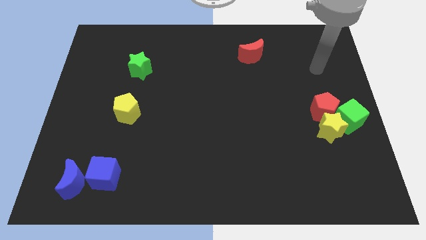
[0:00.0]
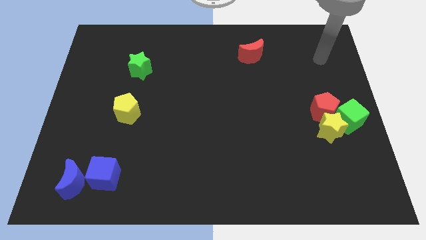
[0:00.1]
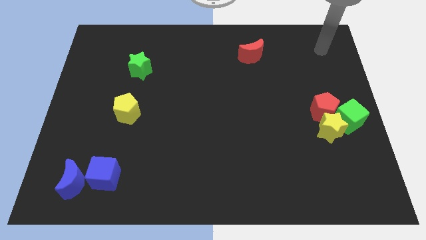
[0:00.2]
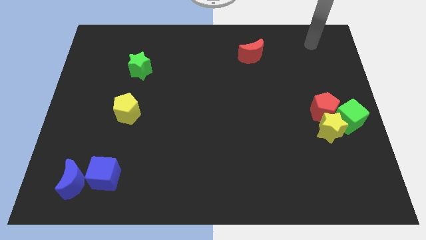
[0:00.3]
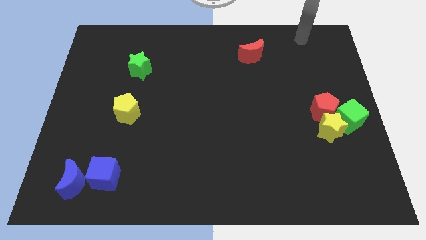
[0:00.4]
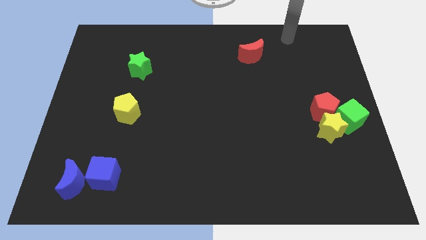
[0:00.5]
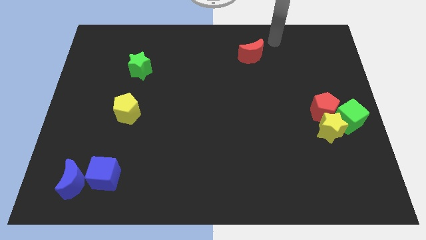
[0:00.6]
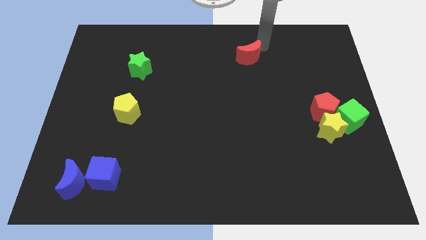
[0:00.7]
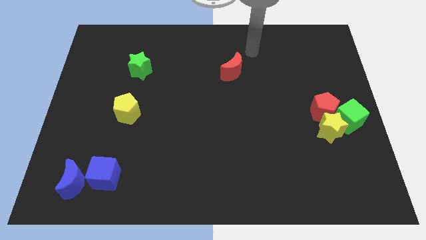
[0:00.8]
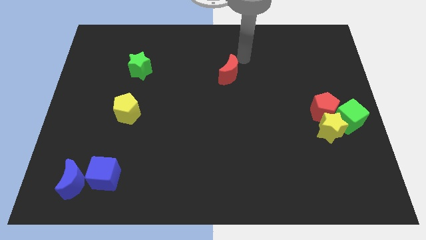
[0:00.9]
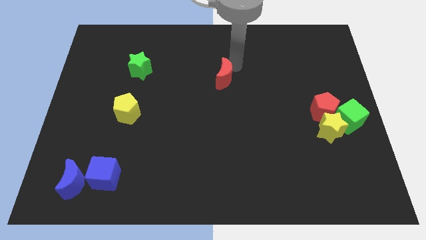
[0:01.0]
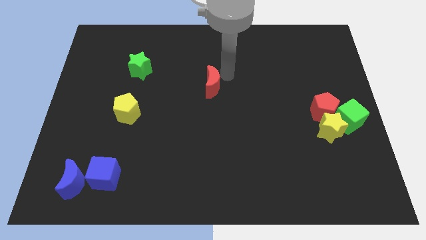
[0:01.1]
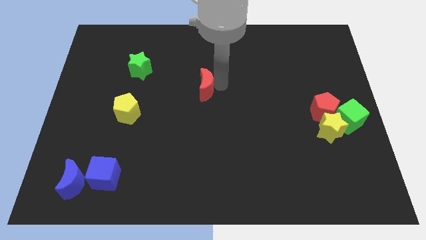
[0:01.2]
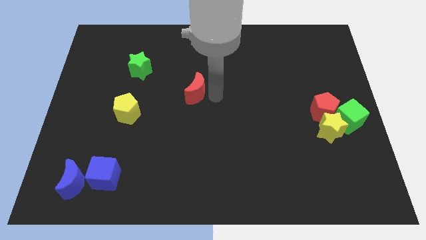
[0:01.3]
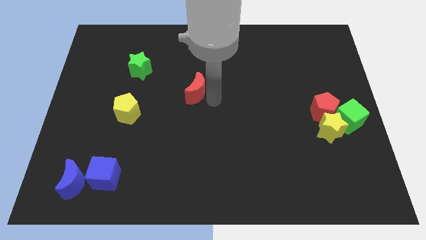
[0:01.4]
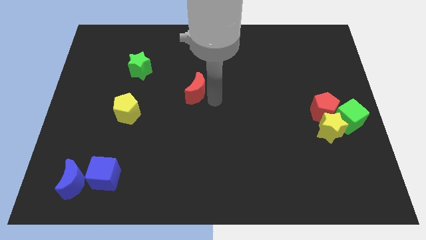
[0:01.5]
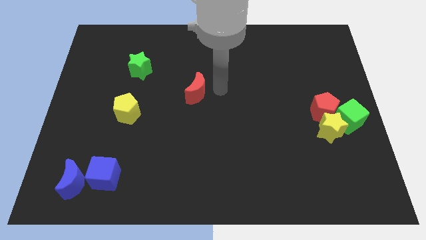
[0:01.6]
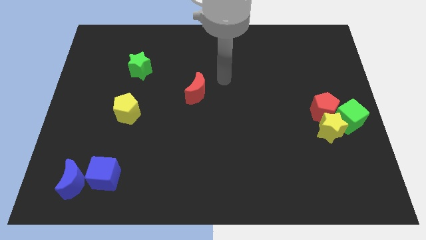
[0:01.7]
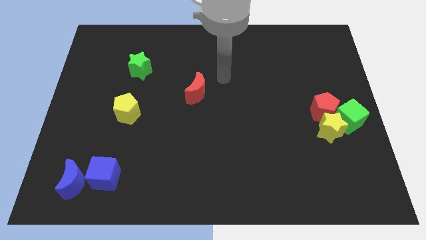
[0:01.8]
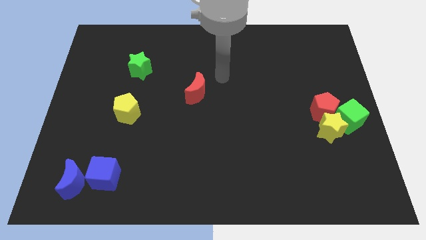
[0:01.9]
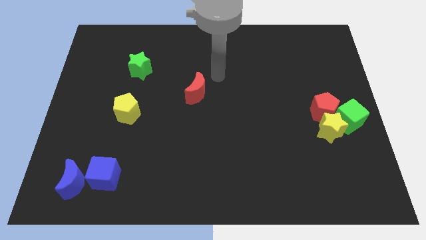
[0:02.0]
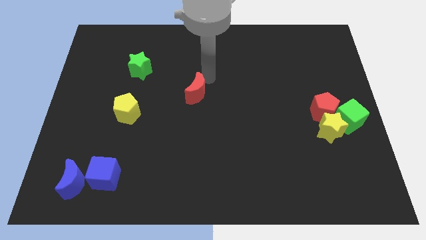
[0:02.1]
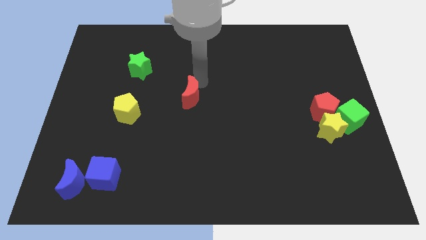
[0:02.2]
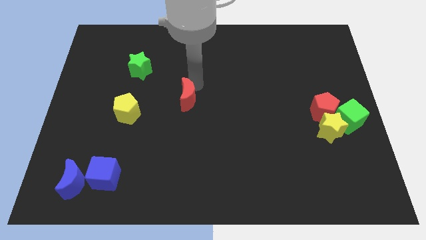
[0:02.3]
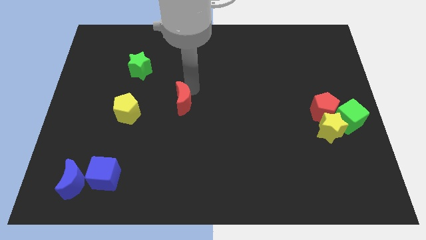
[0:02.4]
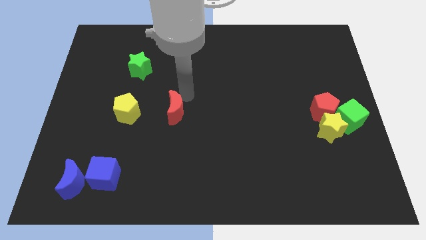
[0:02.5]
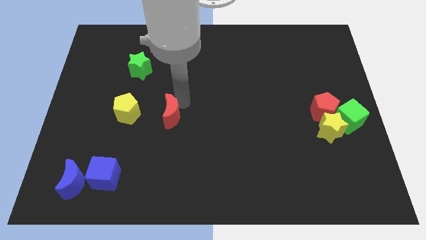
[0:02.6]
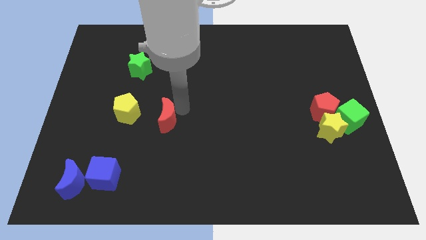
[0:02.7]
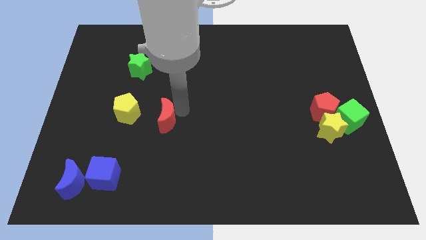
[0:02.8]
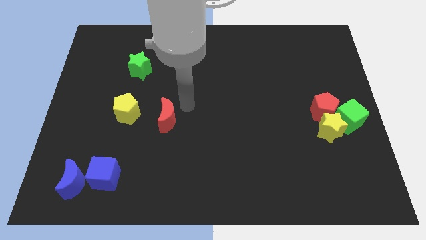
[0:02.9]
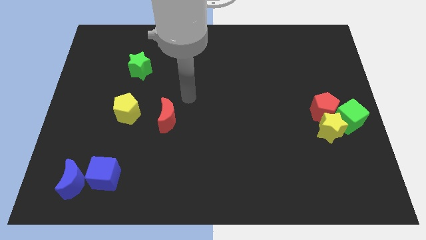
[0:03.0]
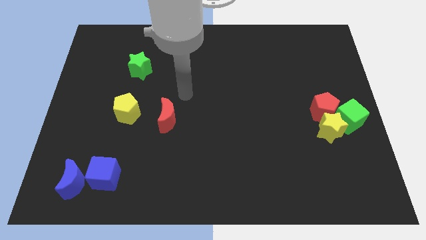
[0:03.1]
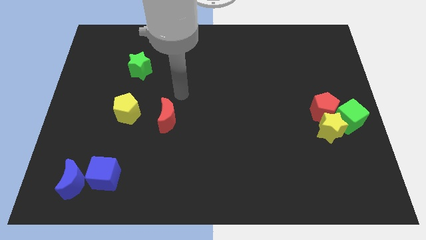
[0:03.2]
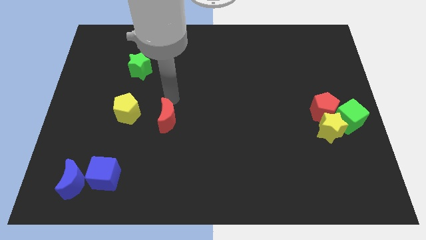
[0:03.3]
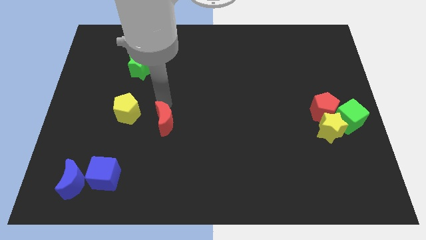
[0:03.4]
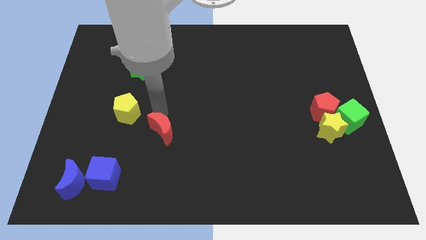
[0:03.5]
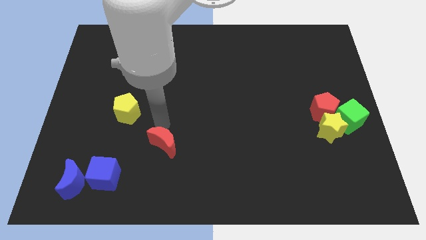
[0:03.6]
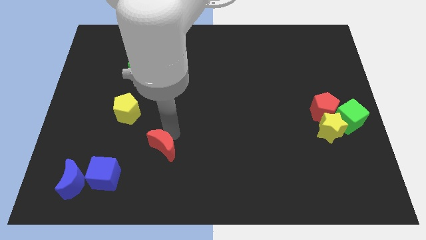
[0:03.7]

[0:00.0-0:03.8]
put the red crescent diagonally bottom right to the yellow pentagon

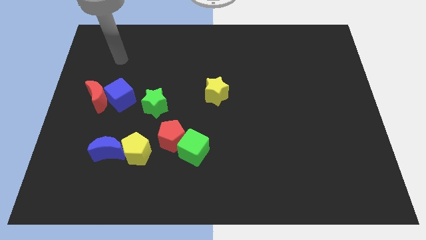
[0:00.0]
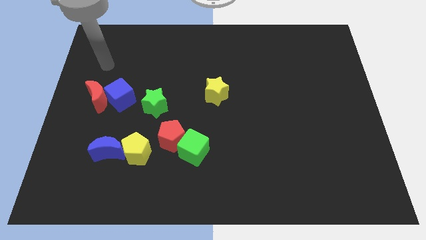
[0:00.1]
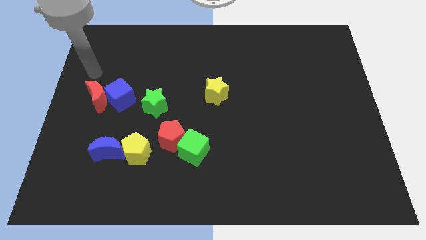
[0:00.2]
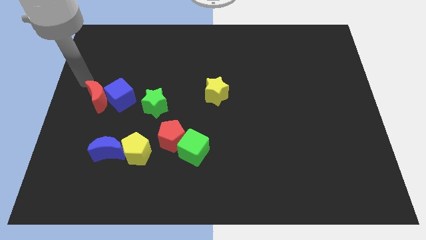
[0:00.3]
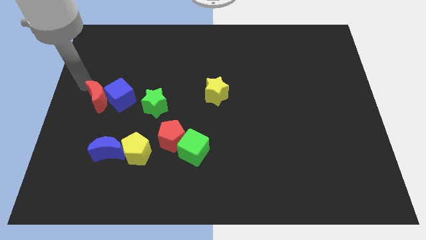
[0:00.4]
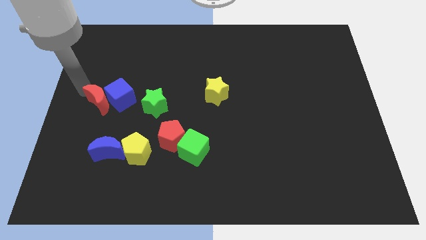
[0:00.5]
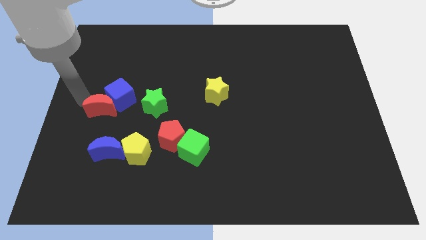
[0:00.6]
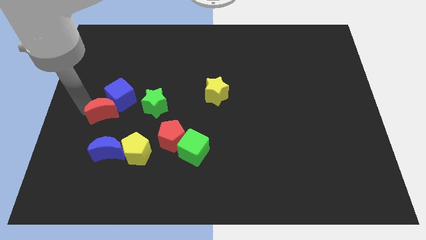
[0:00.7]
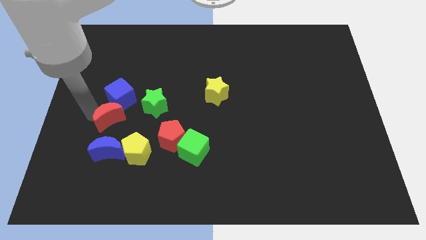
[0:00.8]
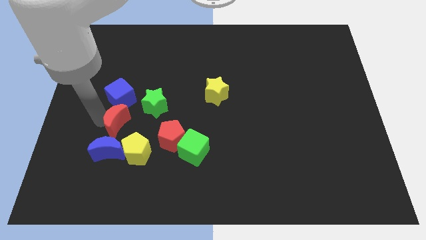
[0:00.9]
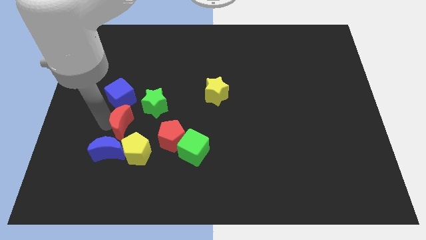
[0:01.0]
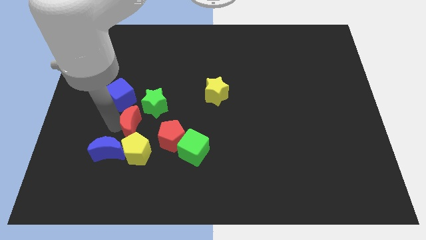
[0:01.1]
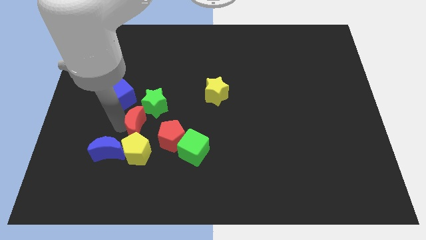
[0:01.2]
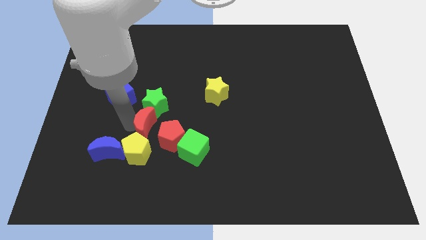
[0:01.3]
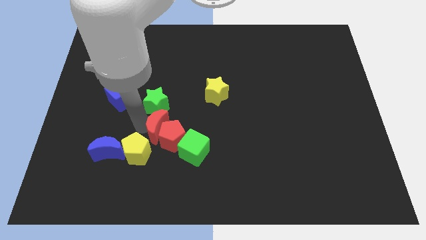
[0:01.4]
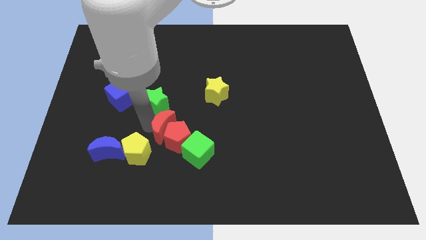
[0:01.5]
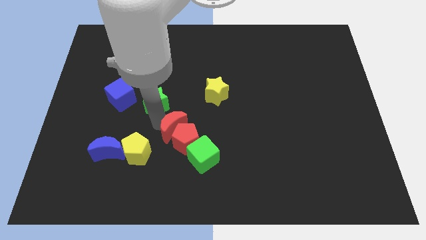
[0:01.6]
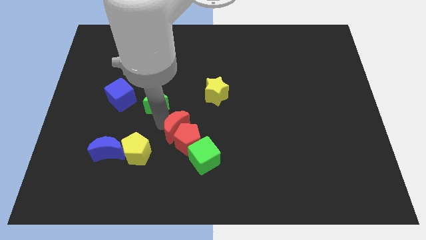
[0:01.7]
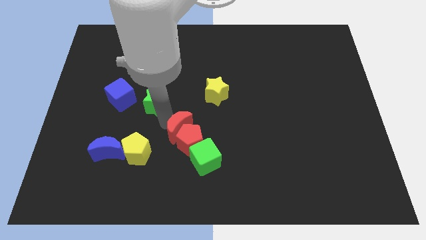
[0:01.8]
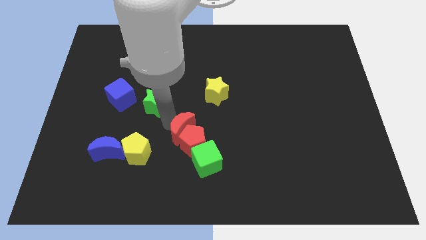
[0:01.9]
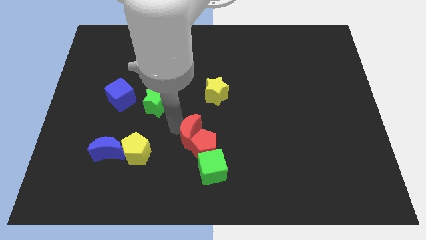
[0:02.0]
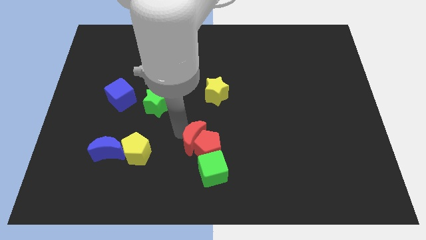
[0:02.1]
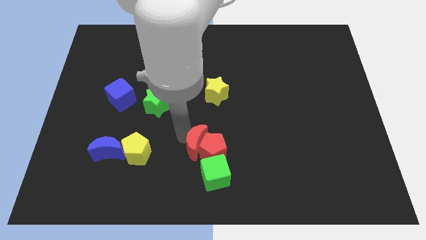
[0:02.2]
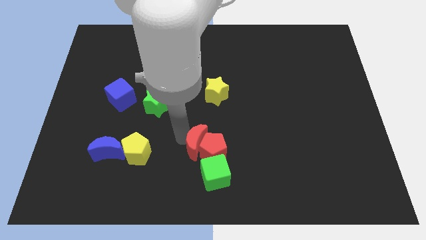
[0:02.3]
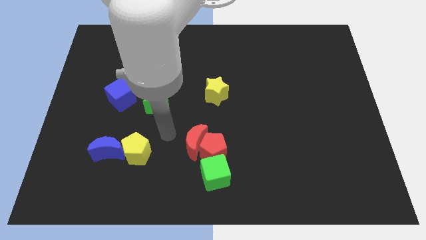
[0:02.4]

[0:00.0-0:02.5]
push the red moon along with the red pentagon and green cube

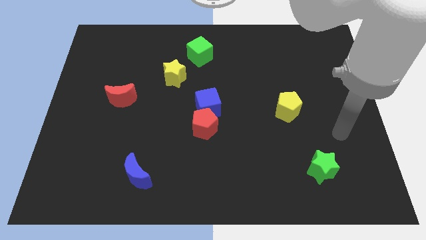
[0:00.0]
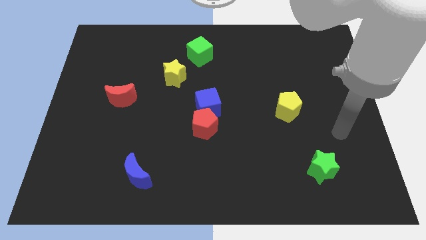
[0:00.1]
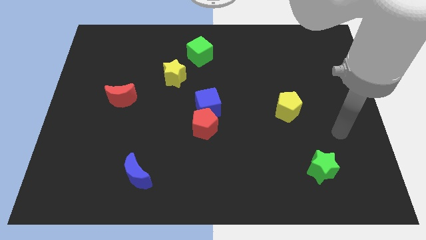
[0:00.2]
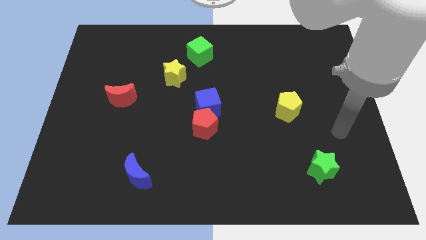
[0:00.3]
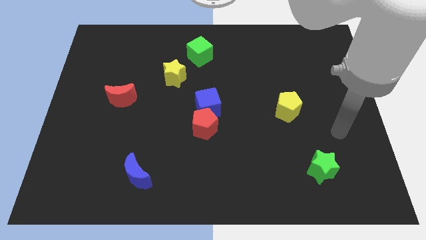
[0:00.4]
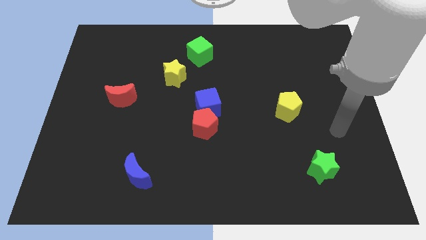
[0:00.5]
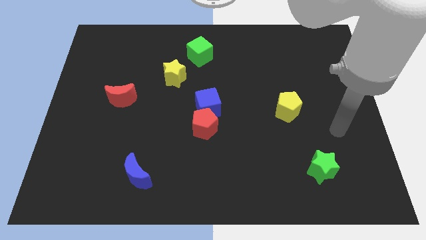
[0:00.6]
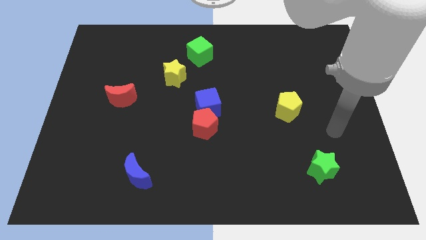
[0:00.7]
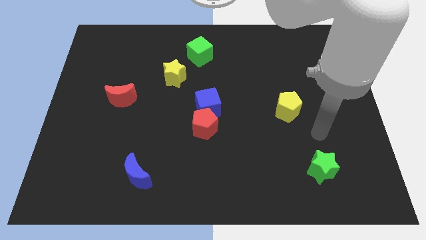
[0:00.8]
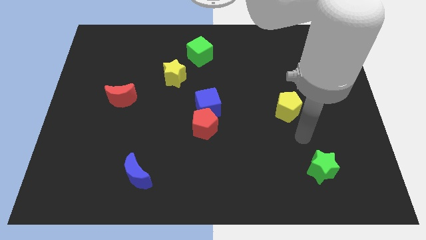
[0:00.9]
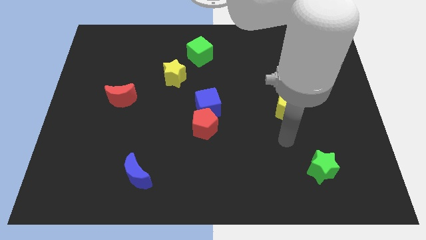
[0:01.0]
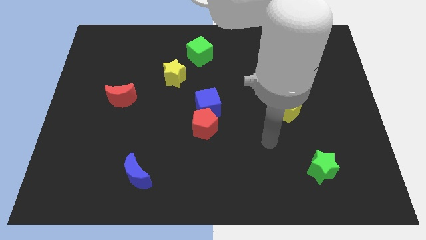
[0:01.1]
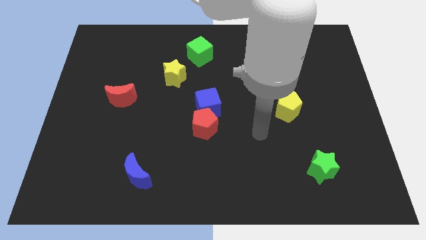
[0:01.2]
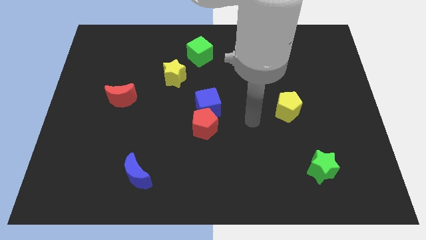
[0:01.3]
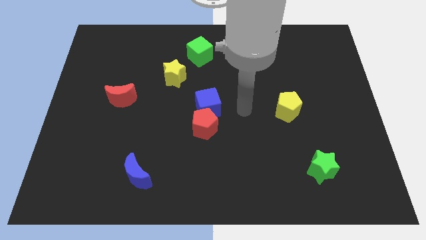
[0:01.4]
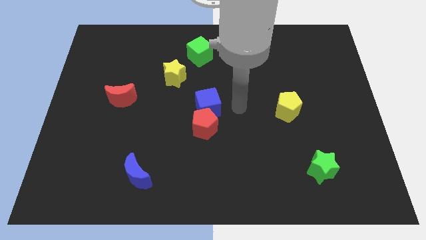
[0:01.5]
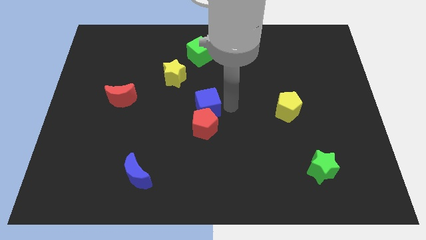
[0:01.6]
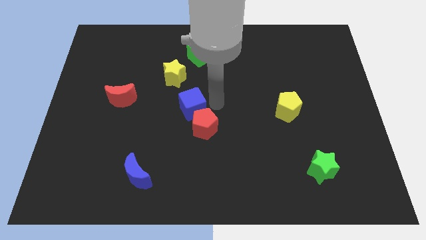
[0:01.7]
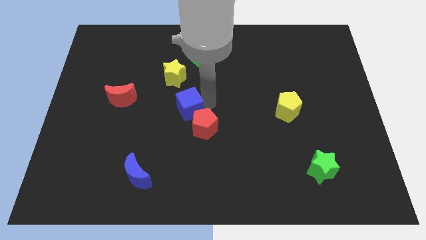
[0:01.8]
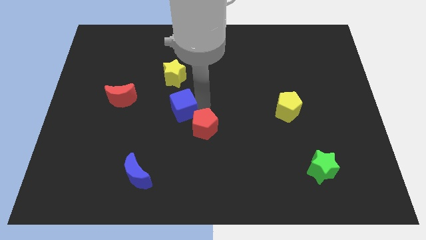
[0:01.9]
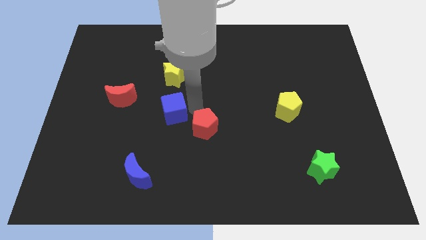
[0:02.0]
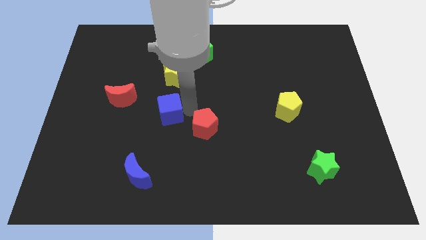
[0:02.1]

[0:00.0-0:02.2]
slightly push the blue cube to the left of the board

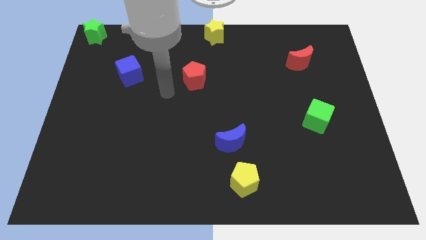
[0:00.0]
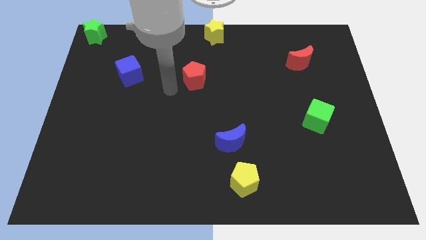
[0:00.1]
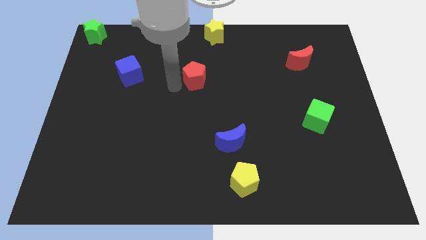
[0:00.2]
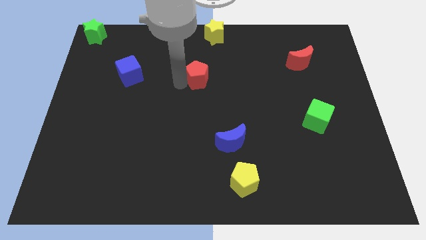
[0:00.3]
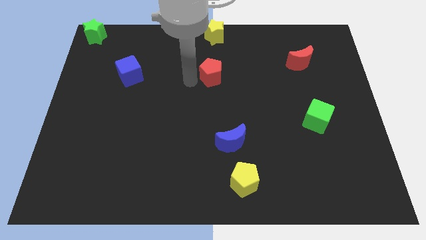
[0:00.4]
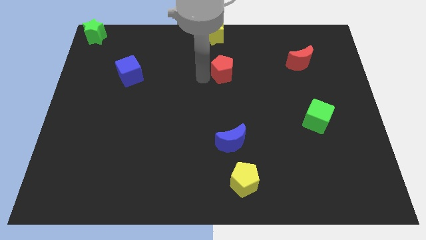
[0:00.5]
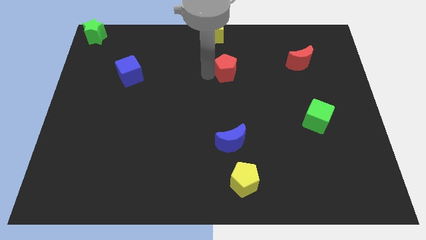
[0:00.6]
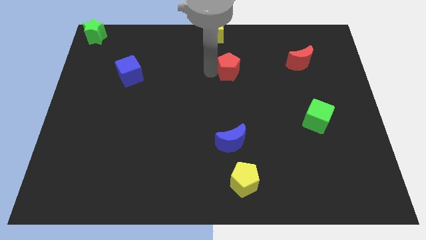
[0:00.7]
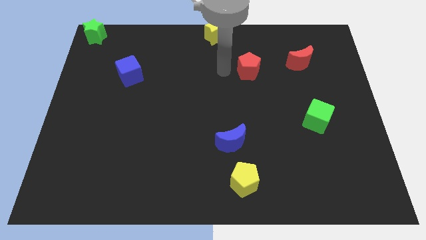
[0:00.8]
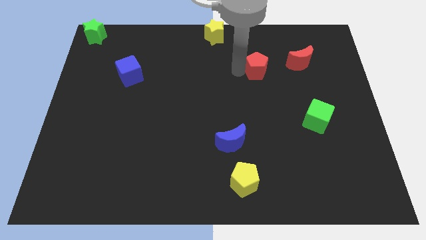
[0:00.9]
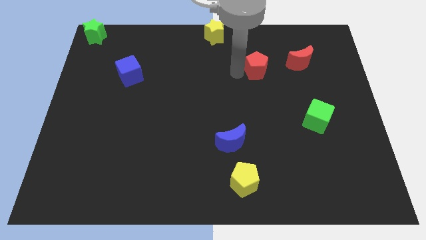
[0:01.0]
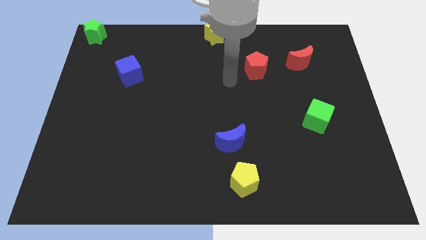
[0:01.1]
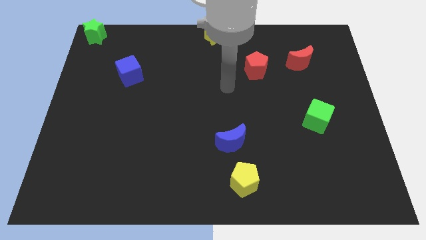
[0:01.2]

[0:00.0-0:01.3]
slide the red pentagon towards the left side of the red moon
